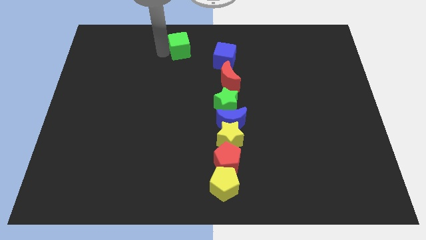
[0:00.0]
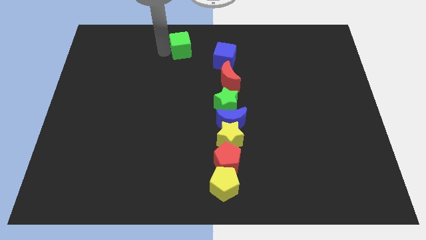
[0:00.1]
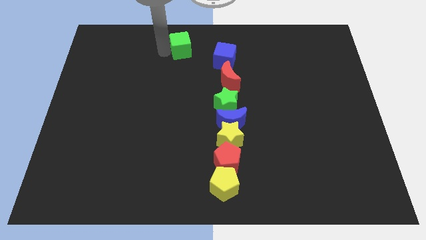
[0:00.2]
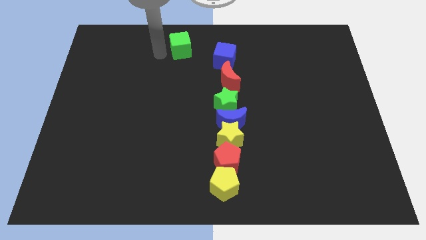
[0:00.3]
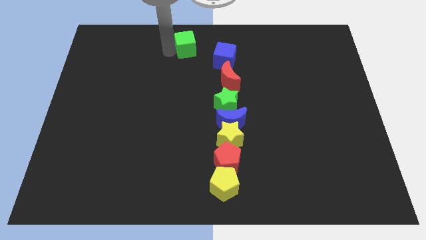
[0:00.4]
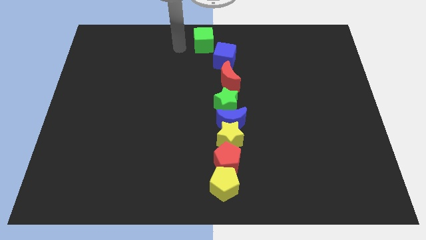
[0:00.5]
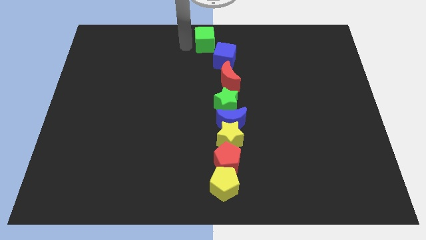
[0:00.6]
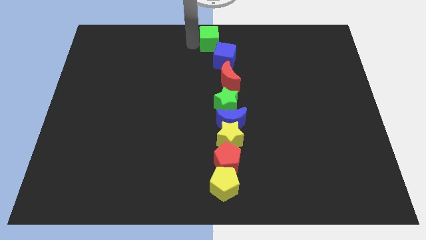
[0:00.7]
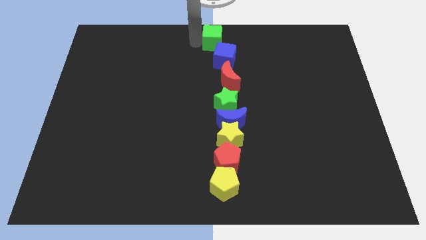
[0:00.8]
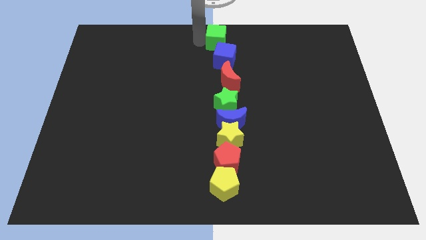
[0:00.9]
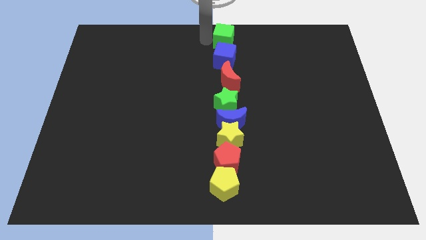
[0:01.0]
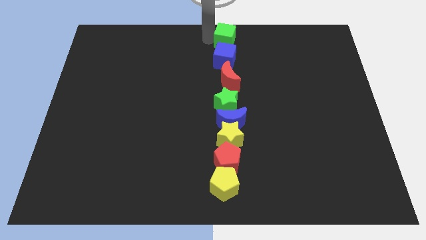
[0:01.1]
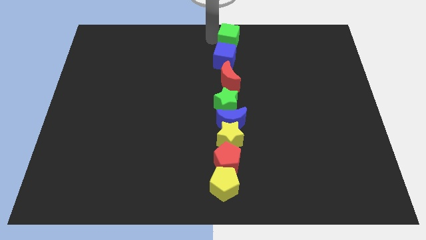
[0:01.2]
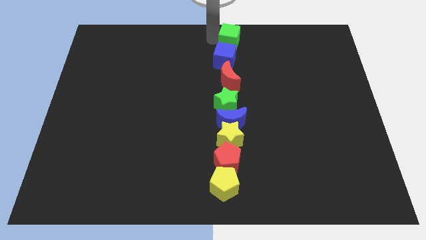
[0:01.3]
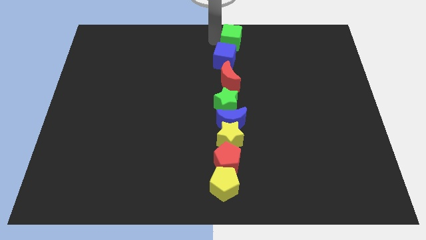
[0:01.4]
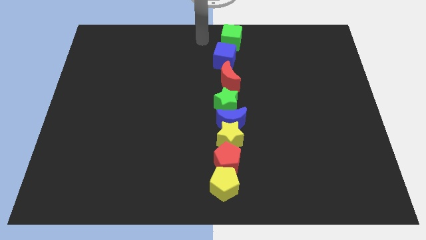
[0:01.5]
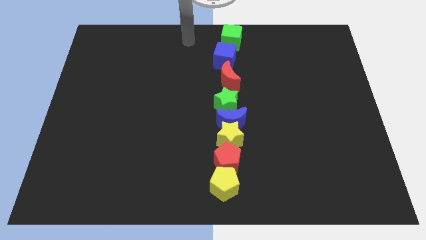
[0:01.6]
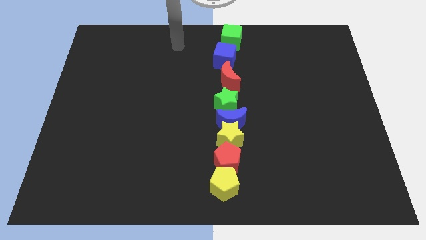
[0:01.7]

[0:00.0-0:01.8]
place the green cube on top of the blue cube

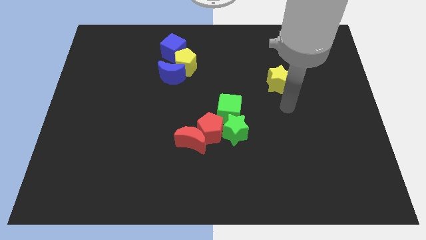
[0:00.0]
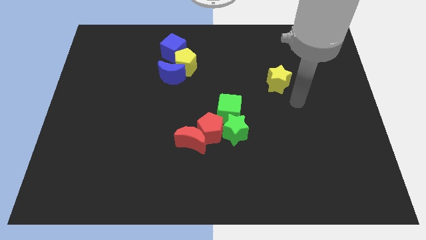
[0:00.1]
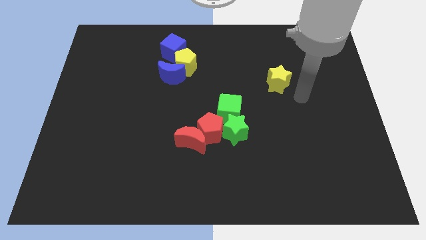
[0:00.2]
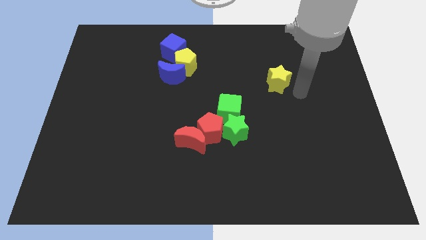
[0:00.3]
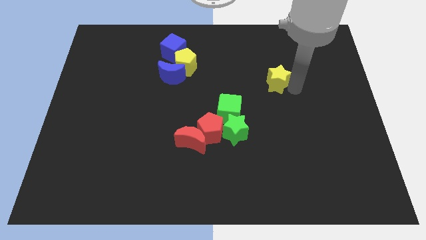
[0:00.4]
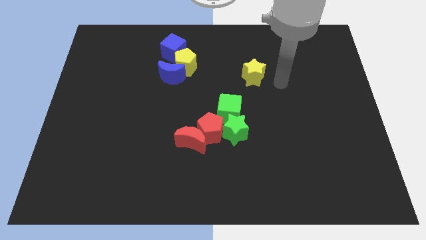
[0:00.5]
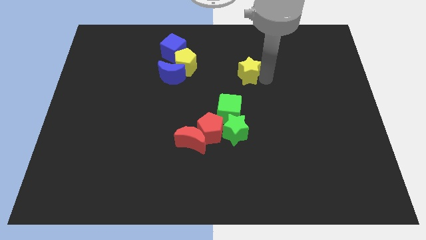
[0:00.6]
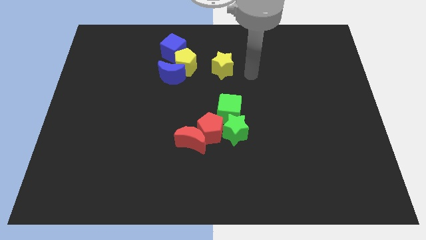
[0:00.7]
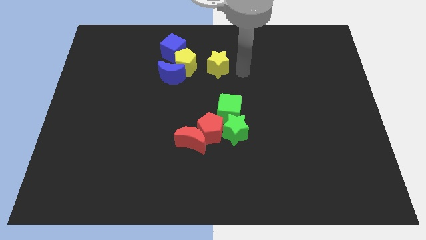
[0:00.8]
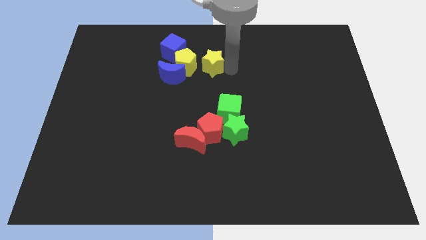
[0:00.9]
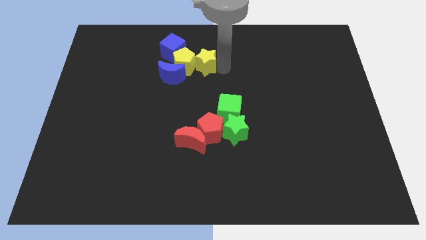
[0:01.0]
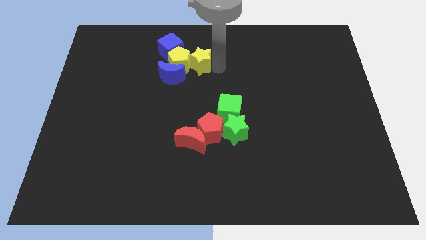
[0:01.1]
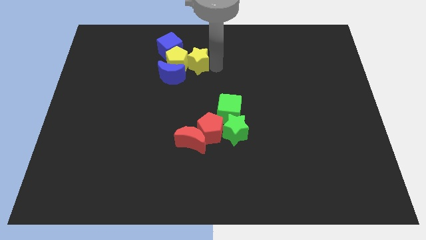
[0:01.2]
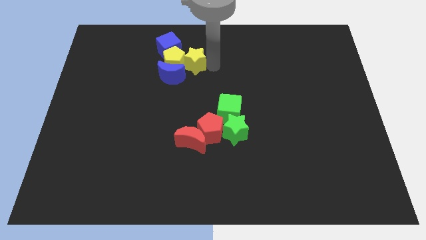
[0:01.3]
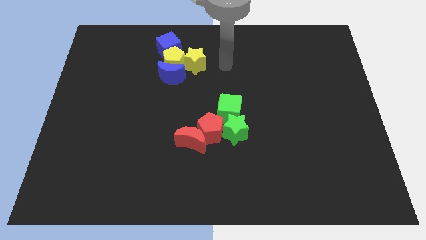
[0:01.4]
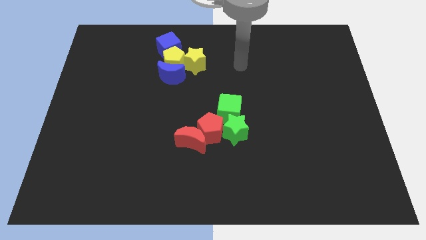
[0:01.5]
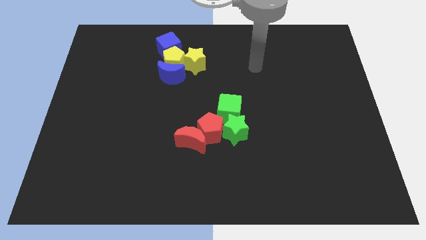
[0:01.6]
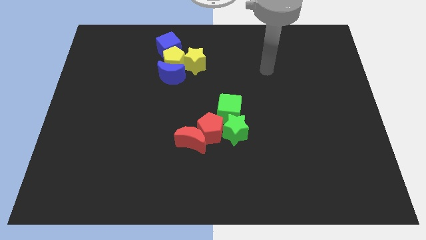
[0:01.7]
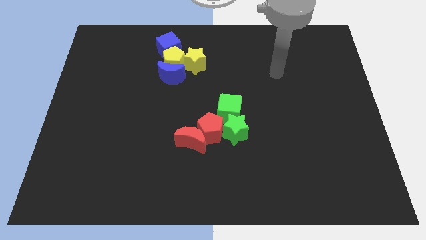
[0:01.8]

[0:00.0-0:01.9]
push the yellow star into the yellow pentagon

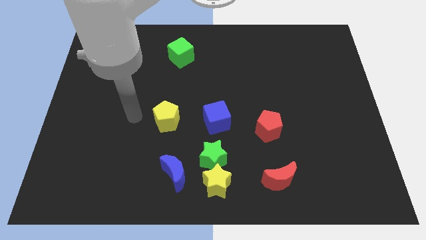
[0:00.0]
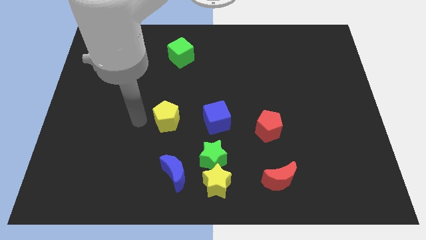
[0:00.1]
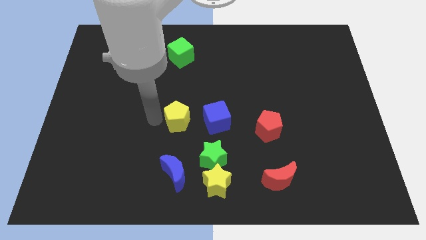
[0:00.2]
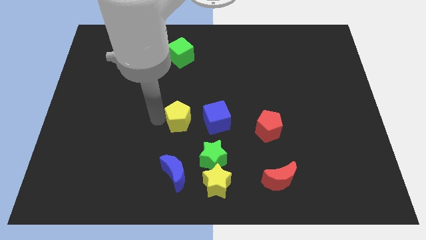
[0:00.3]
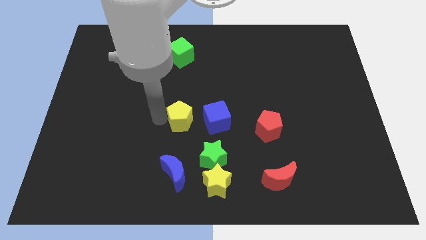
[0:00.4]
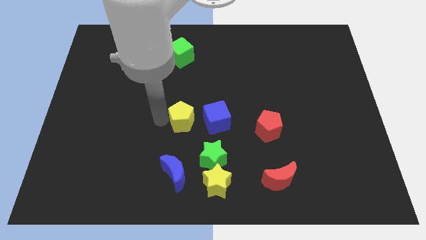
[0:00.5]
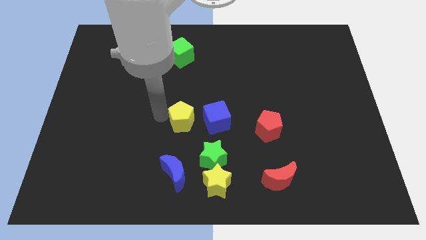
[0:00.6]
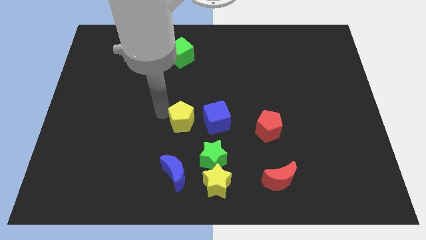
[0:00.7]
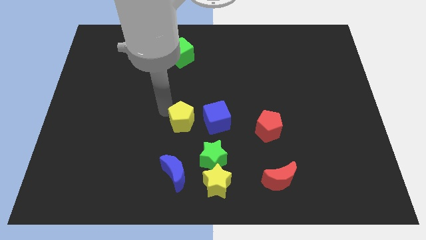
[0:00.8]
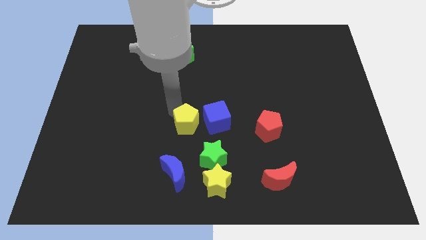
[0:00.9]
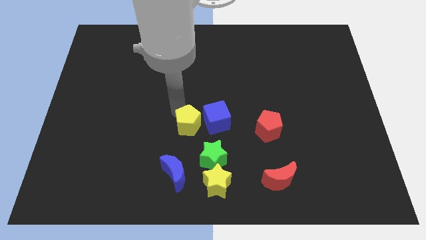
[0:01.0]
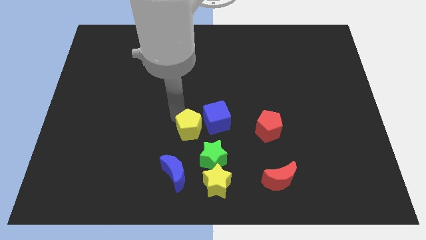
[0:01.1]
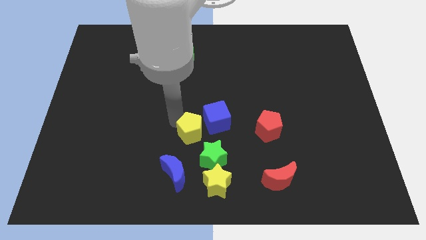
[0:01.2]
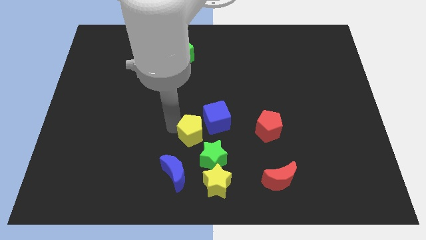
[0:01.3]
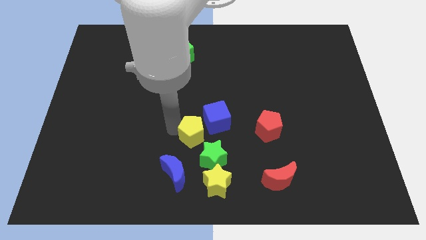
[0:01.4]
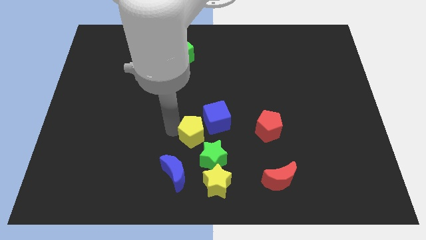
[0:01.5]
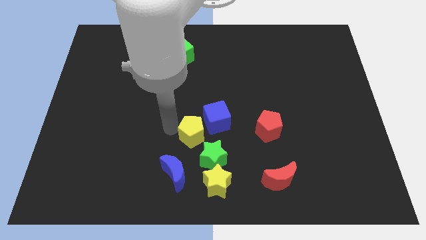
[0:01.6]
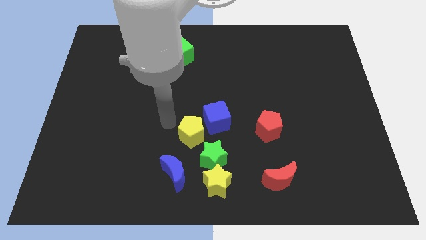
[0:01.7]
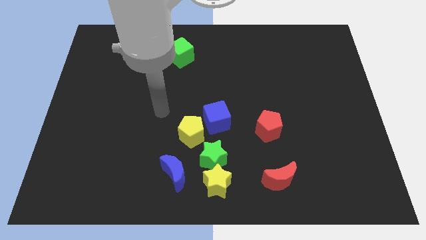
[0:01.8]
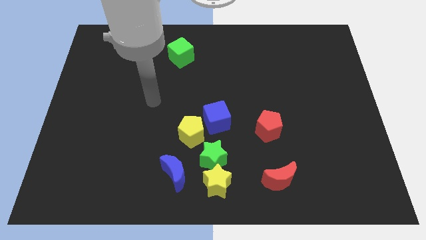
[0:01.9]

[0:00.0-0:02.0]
place the yellow pentagon diagonal above green star

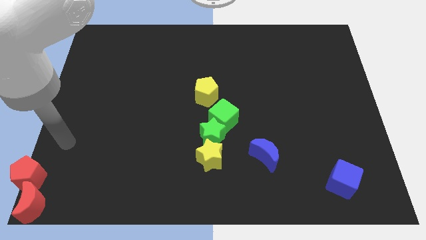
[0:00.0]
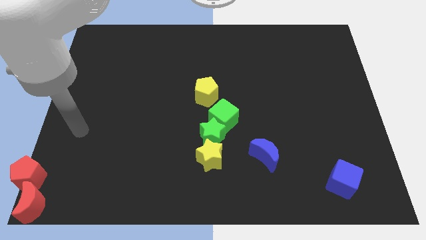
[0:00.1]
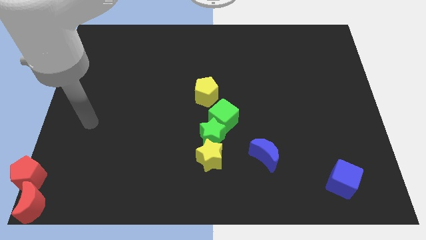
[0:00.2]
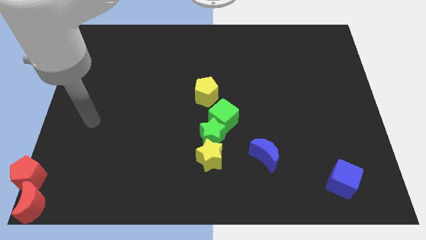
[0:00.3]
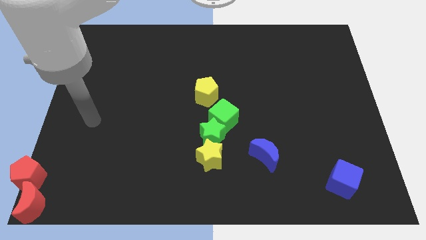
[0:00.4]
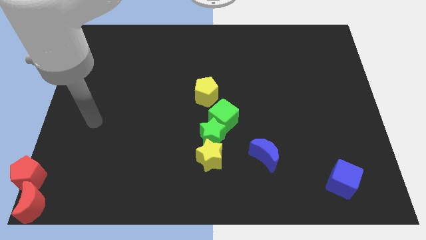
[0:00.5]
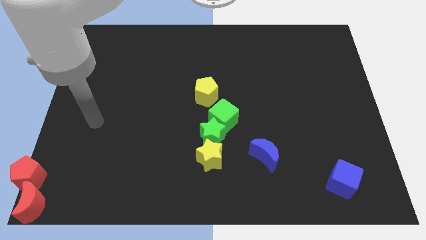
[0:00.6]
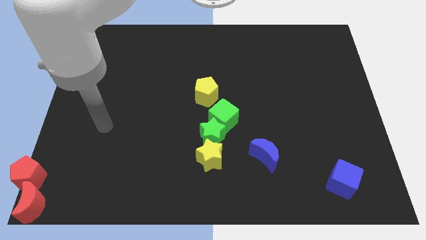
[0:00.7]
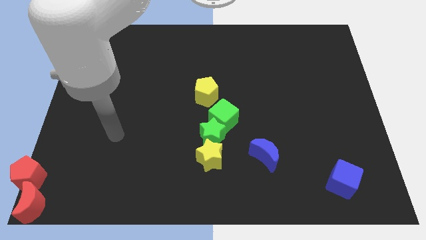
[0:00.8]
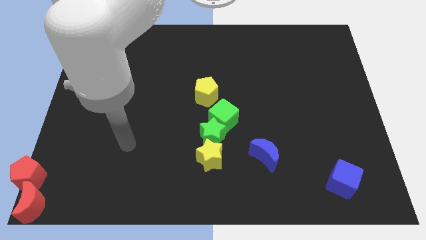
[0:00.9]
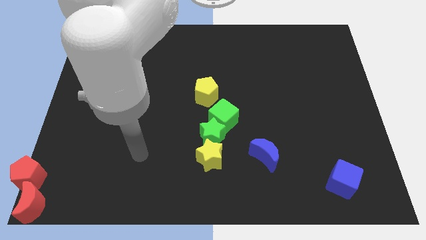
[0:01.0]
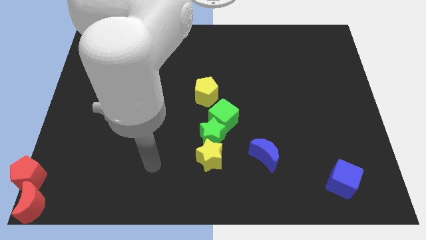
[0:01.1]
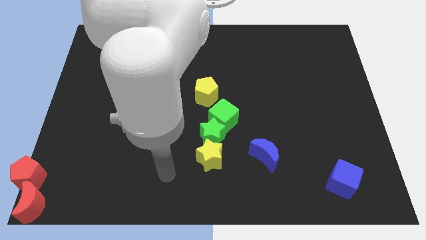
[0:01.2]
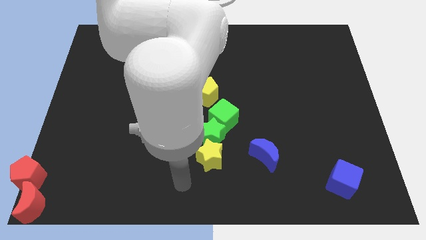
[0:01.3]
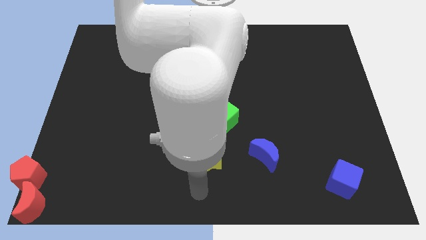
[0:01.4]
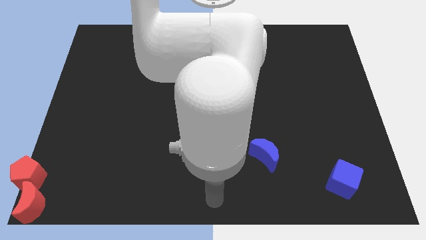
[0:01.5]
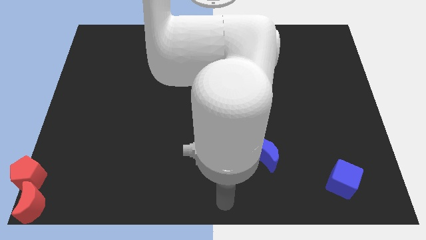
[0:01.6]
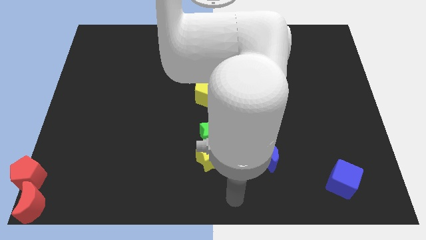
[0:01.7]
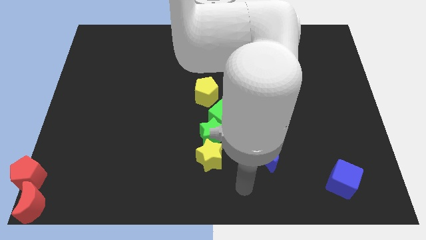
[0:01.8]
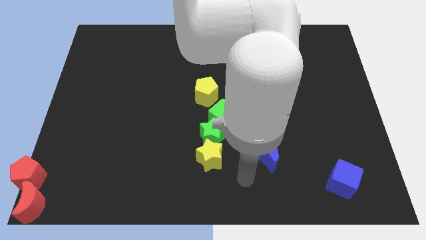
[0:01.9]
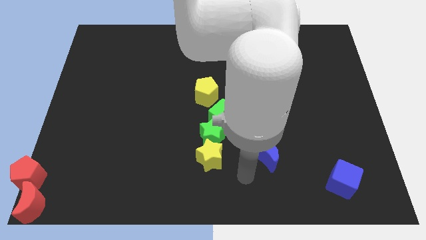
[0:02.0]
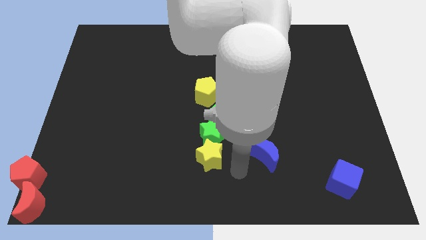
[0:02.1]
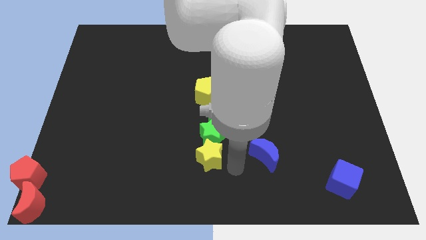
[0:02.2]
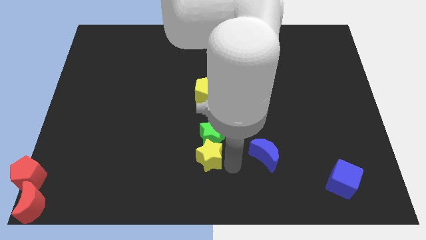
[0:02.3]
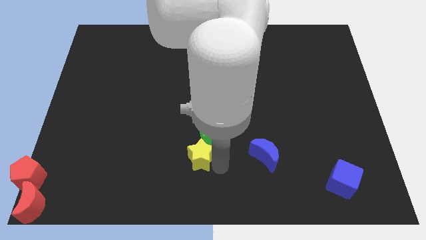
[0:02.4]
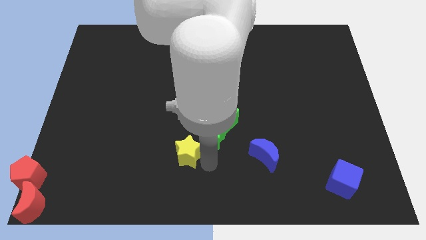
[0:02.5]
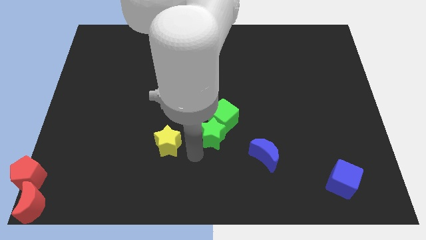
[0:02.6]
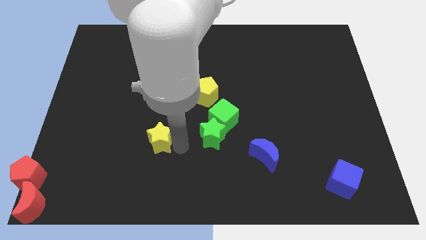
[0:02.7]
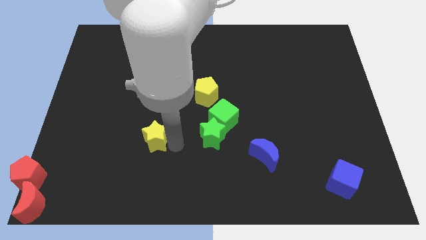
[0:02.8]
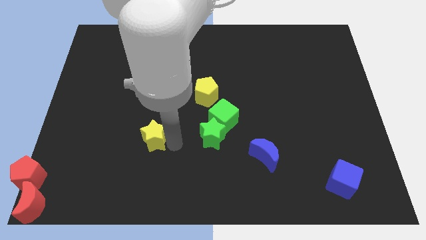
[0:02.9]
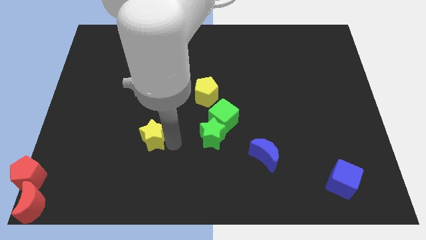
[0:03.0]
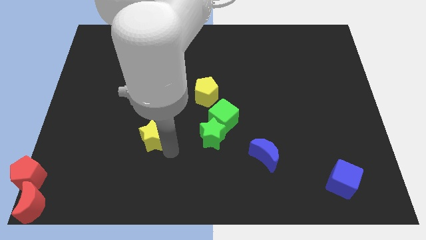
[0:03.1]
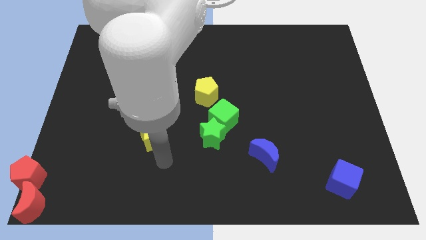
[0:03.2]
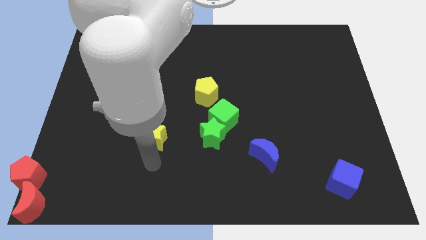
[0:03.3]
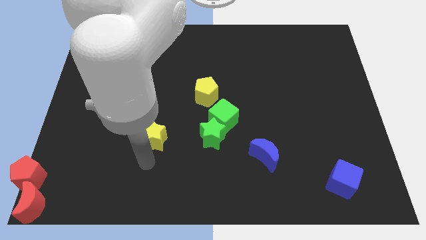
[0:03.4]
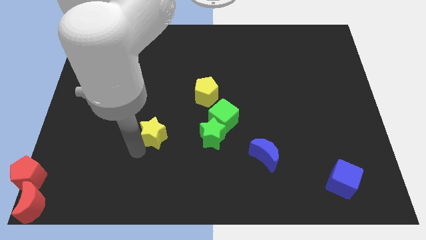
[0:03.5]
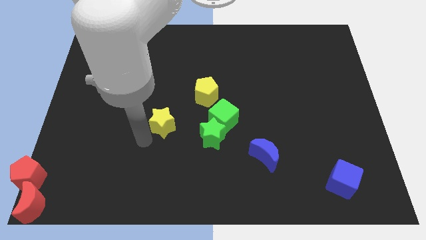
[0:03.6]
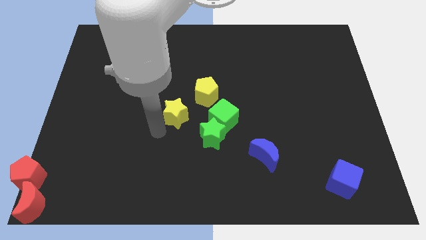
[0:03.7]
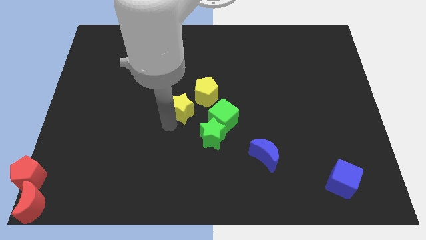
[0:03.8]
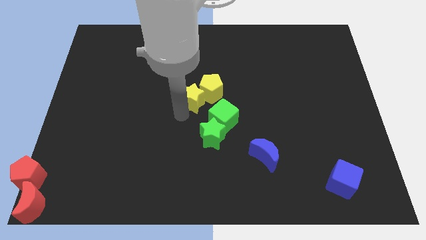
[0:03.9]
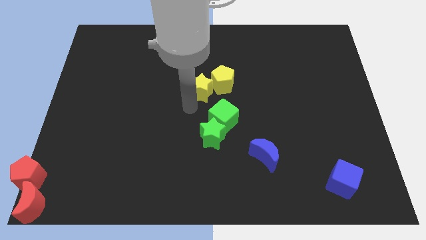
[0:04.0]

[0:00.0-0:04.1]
move the yellow star into the left side of the yellow pentagon
